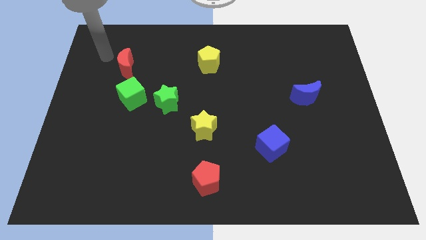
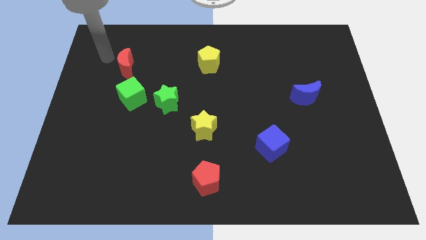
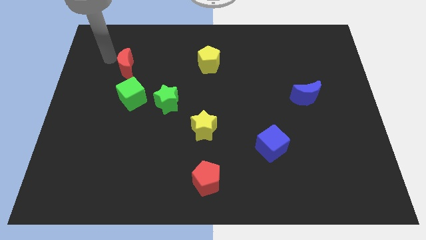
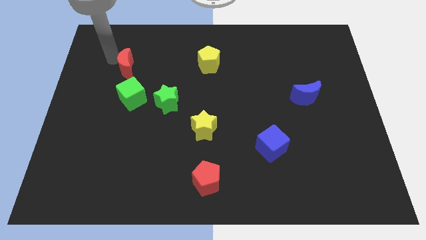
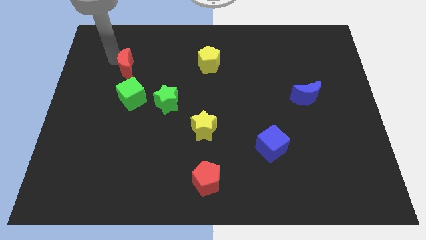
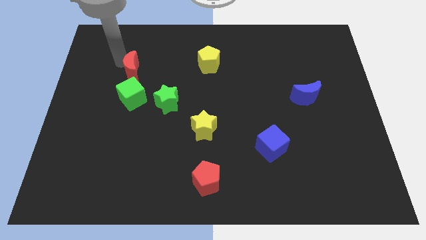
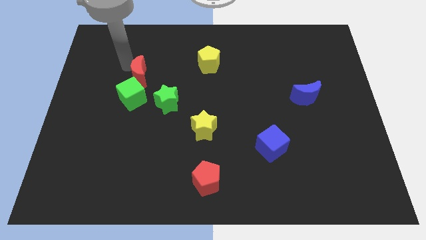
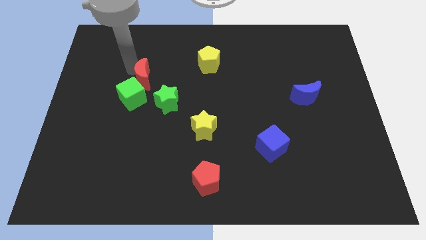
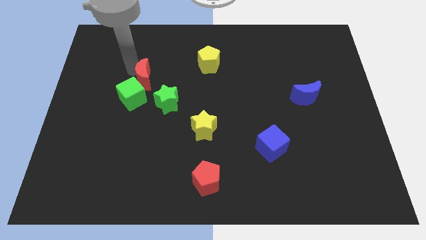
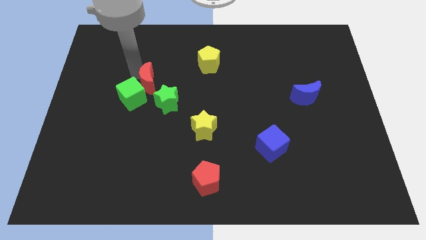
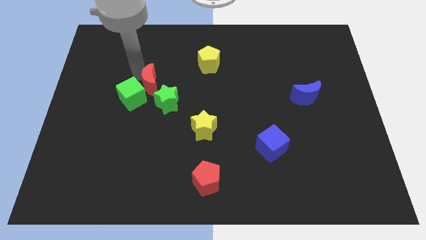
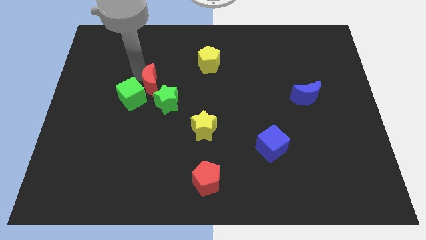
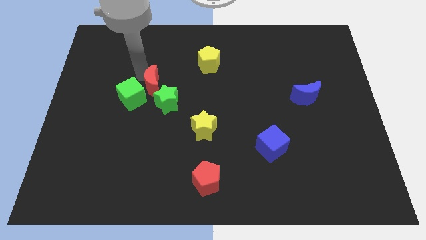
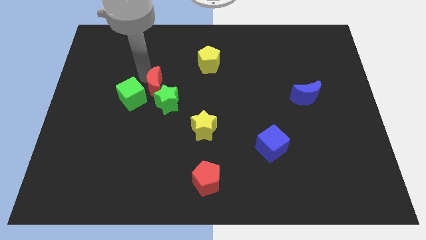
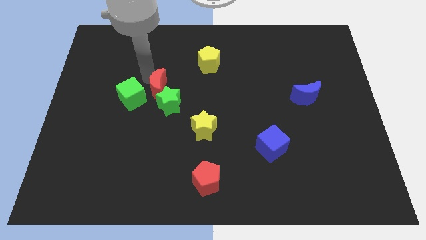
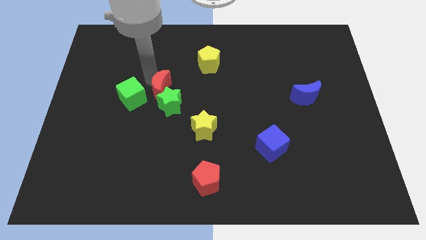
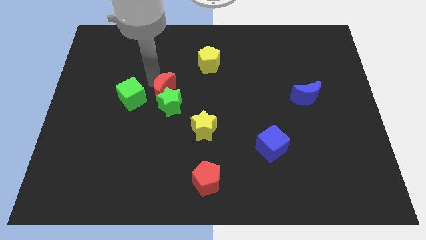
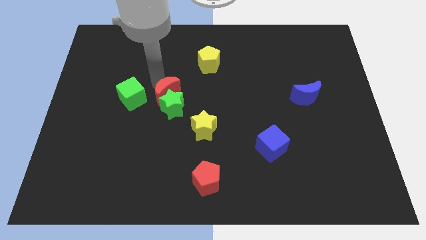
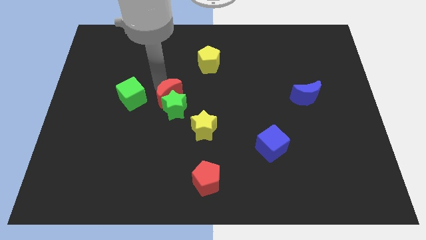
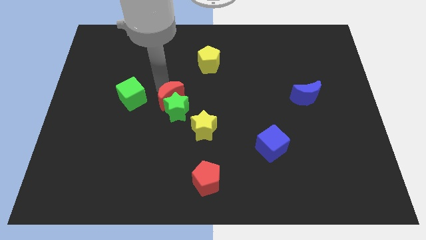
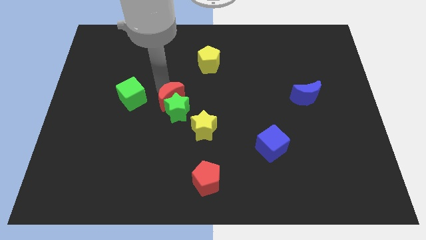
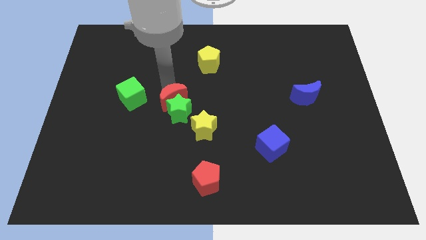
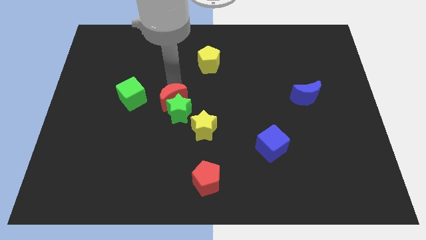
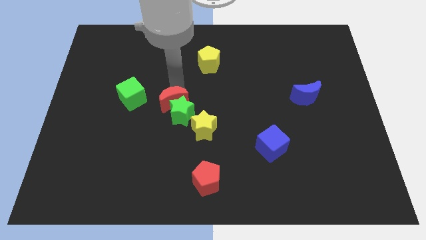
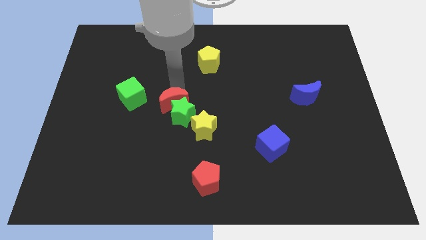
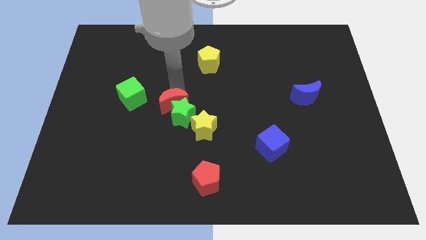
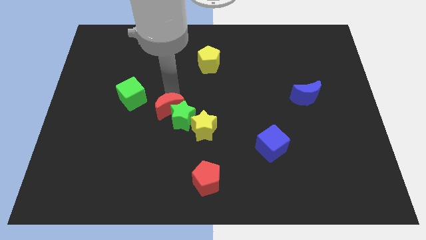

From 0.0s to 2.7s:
push the red moon into green star

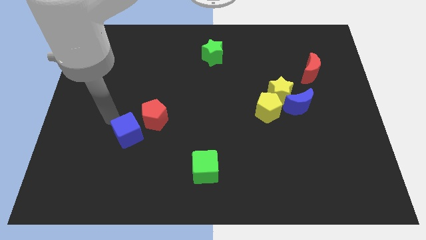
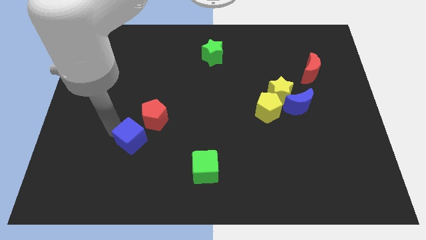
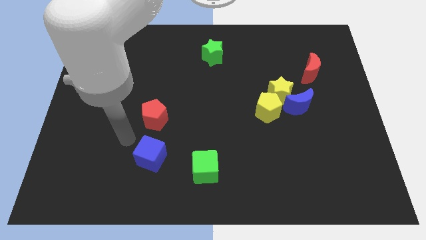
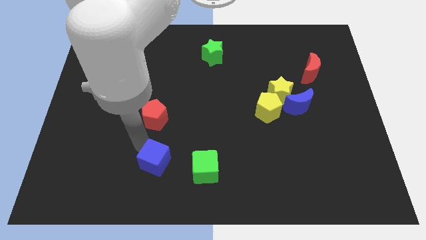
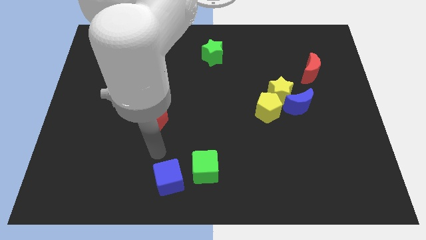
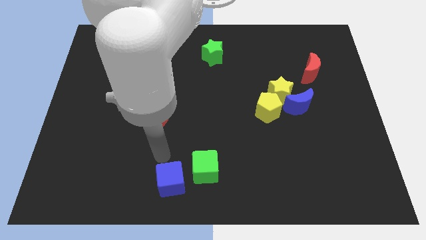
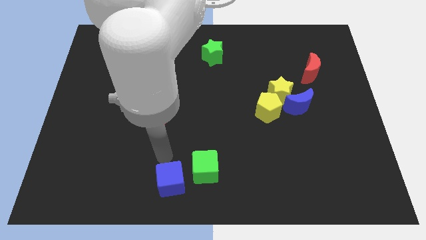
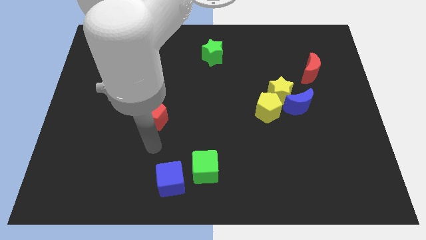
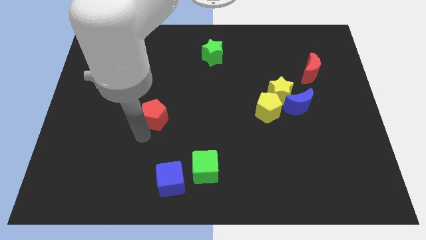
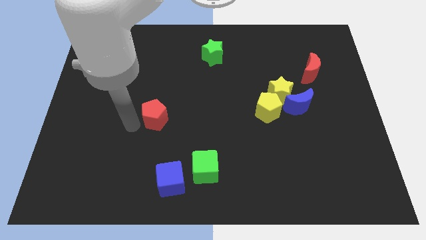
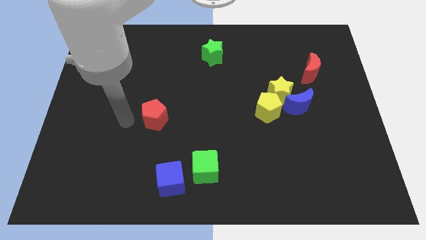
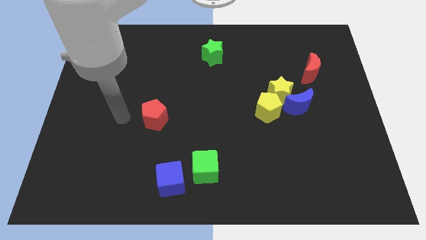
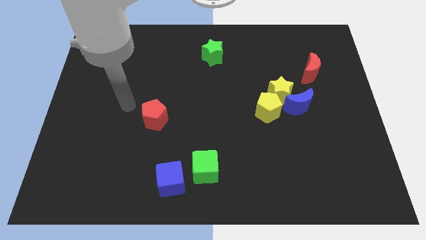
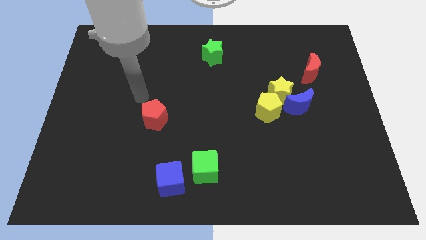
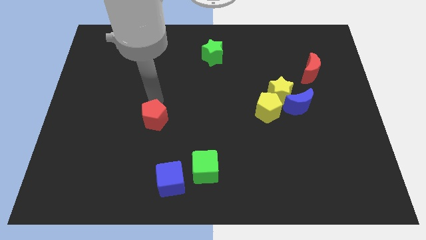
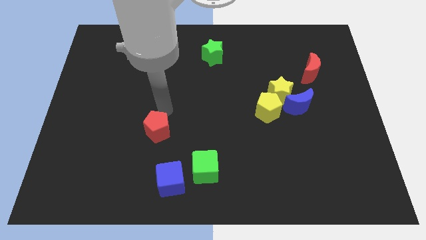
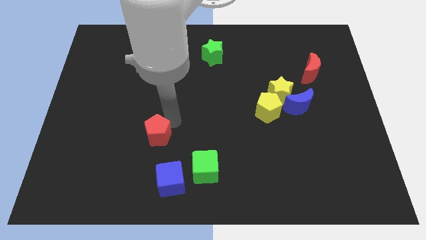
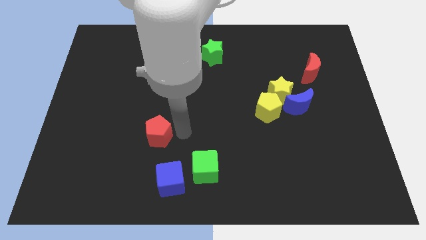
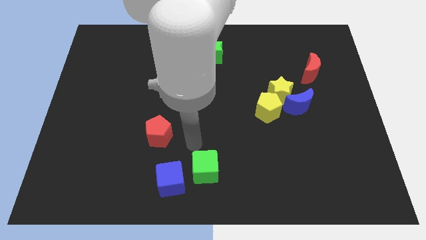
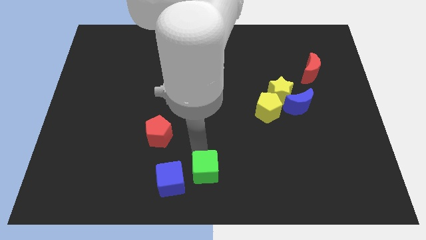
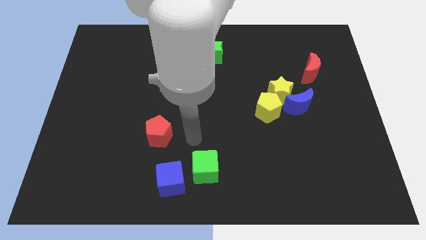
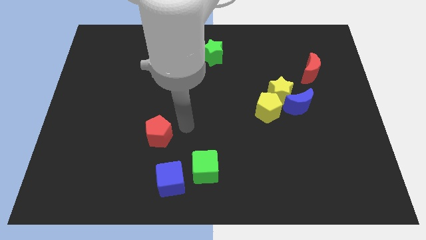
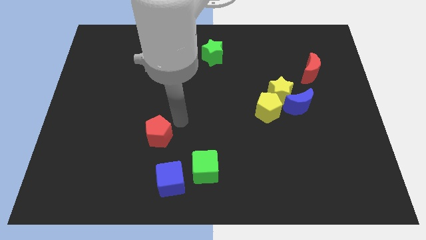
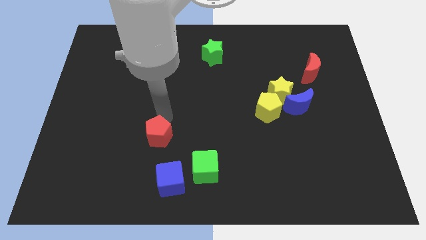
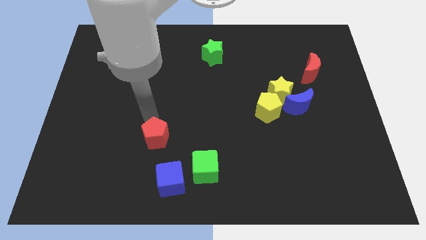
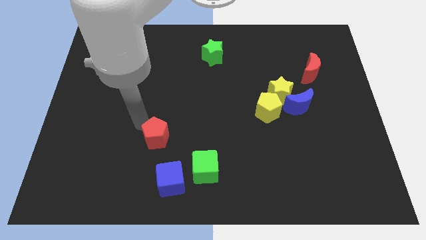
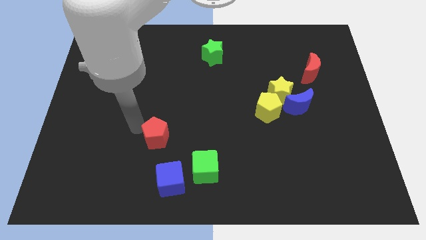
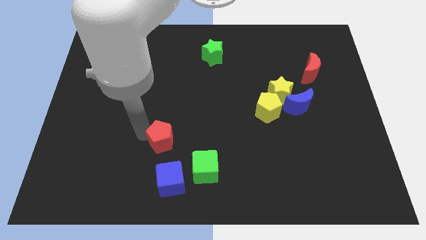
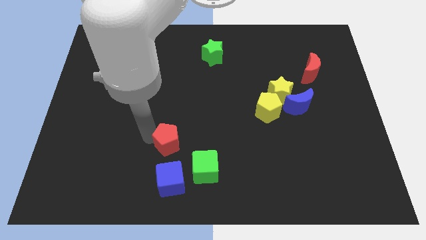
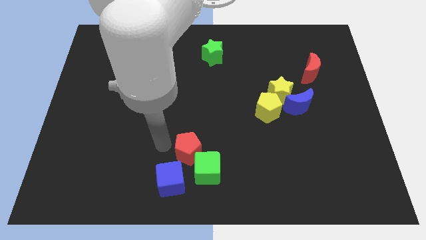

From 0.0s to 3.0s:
place red pentagon and blue cube on left side of green cube

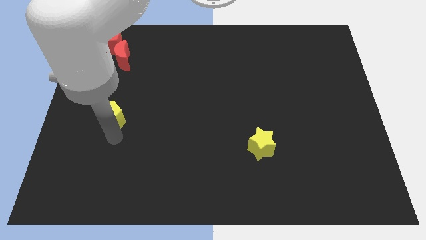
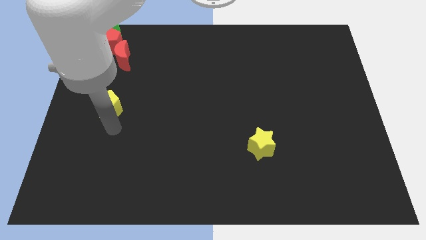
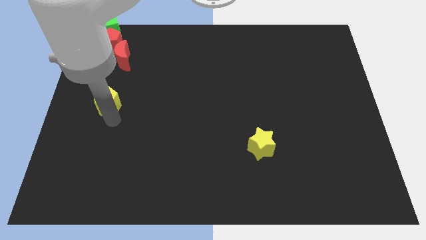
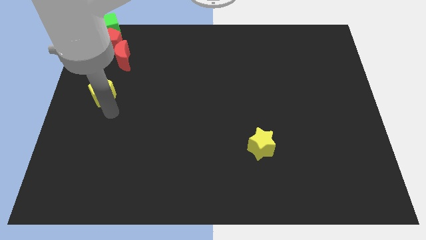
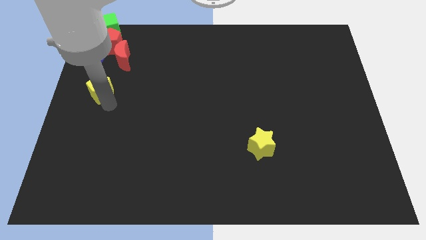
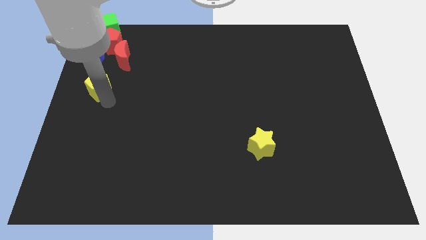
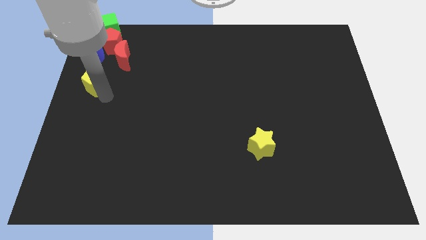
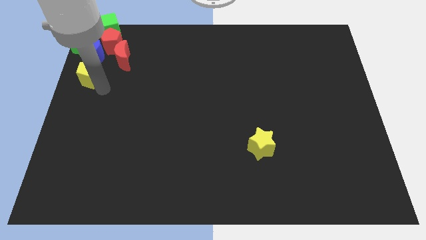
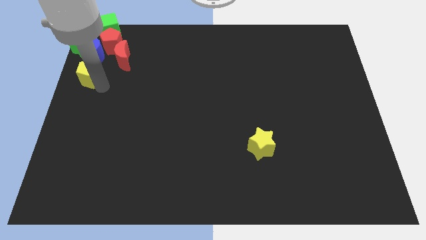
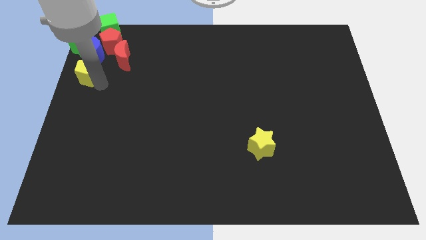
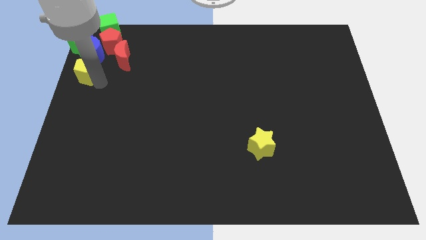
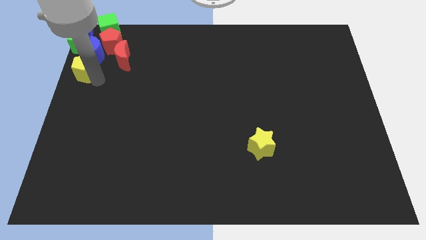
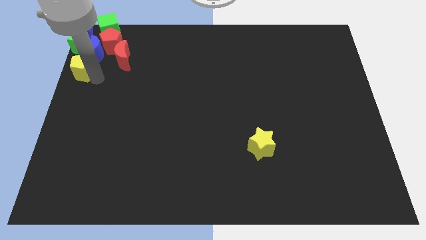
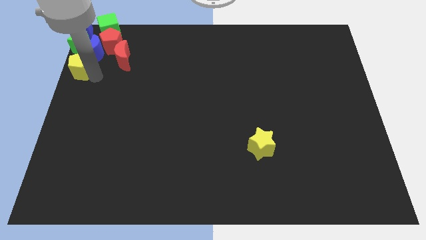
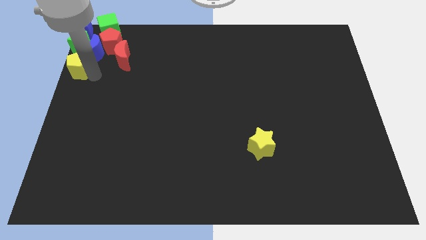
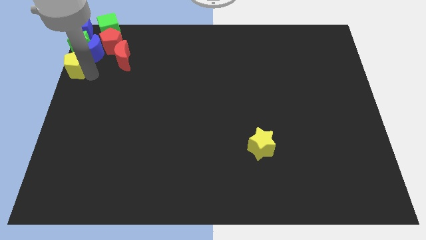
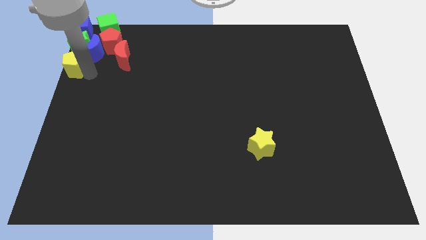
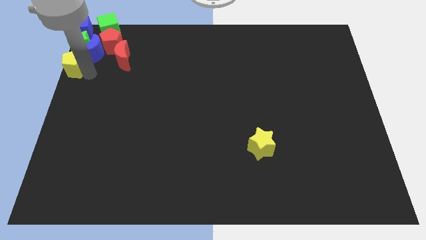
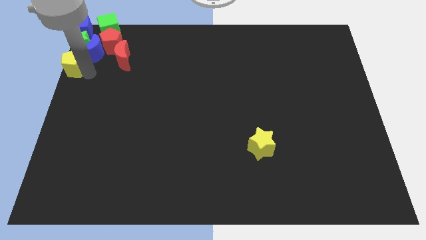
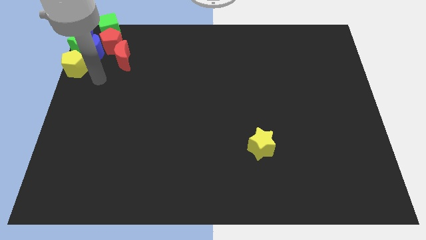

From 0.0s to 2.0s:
push the yellow pentagon into the blue moon

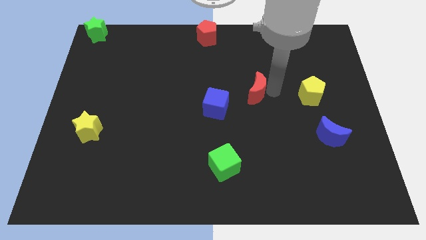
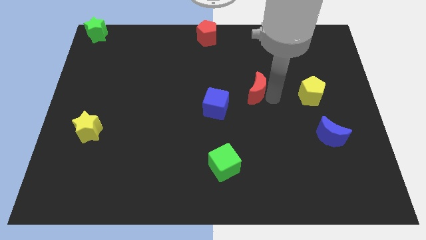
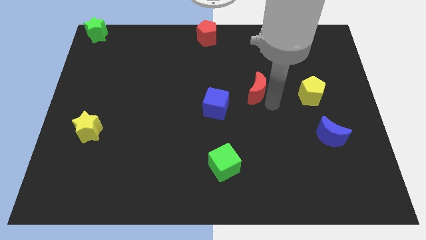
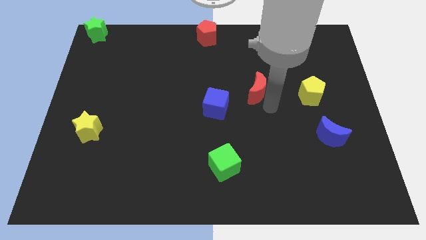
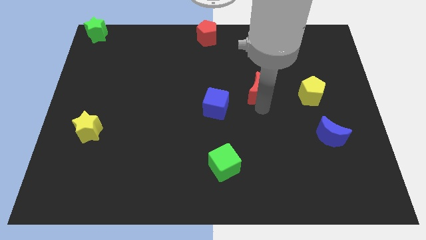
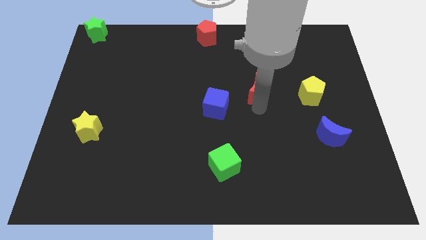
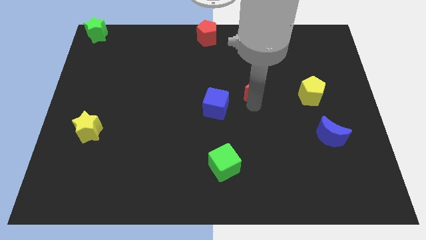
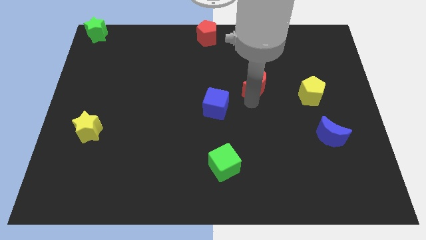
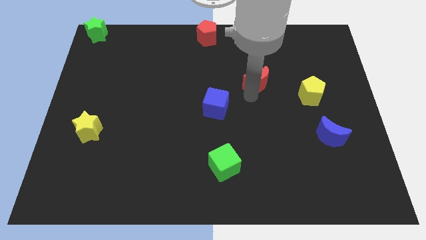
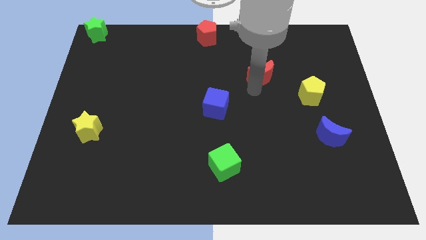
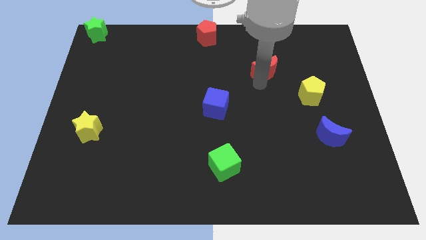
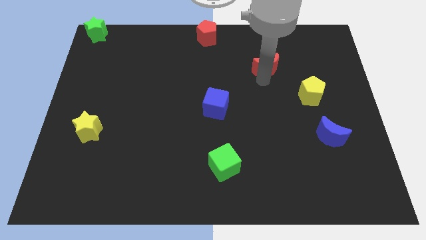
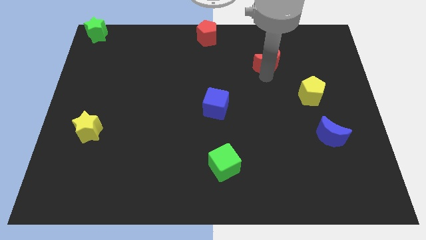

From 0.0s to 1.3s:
move red crescent diagonally right above blue cube
